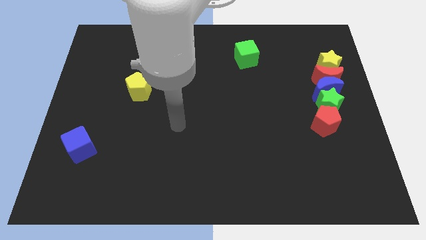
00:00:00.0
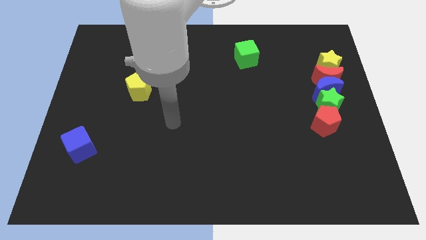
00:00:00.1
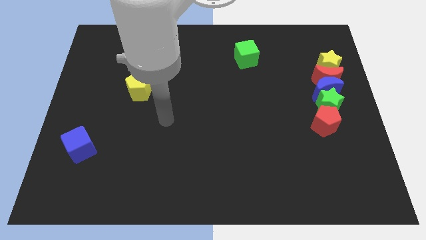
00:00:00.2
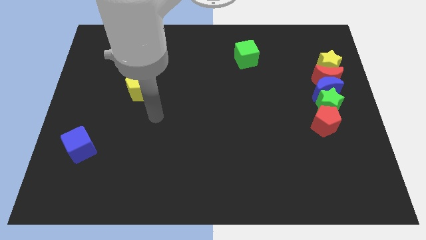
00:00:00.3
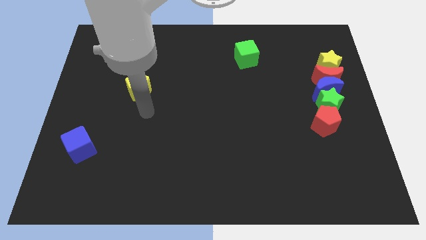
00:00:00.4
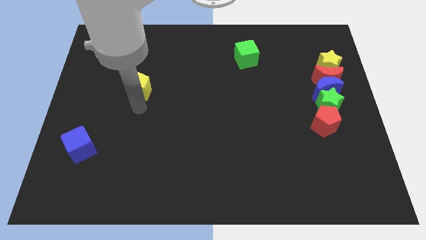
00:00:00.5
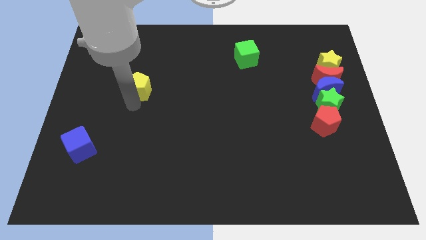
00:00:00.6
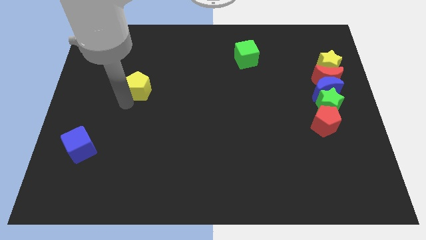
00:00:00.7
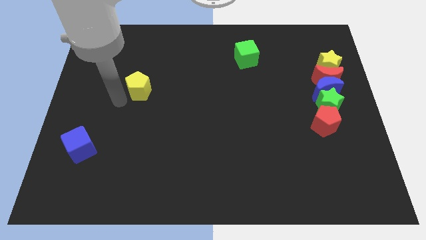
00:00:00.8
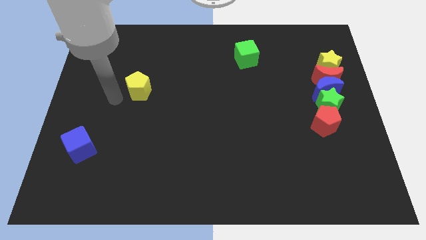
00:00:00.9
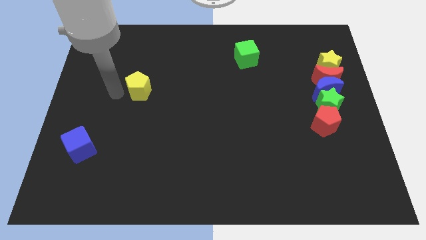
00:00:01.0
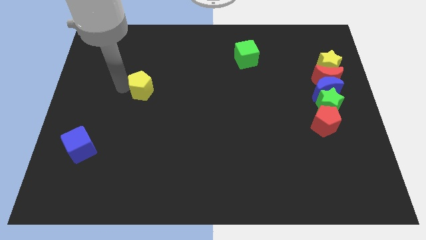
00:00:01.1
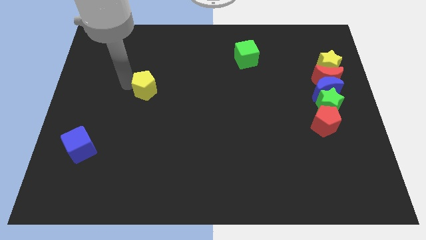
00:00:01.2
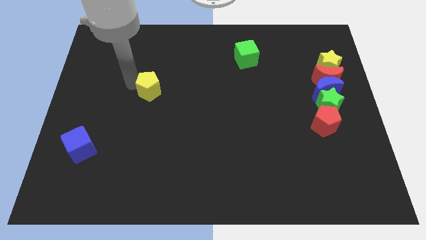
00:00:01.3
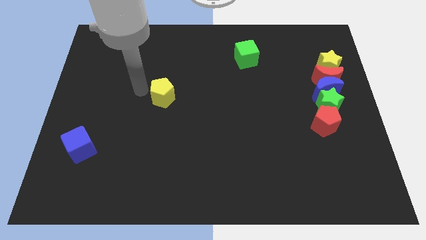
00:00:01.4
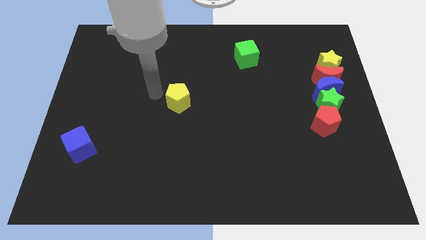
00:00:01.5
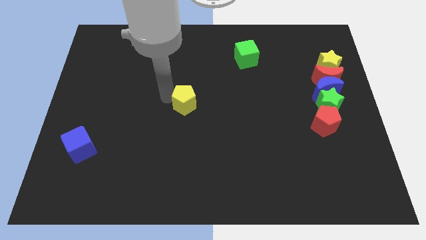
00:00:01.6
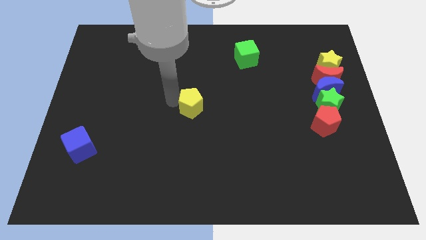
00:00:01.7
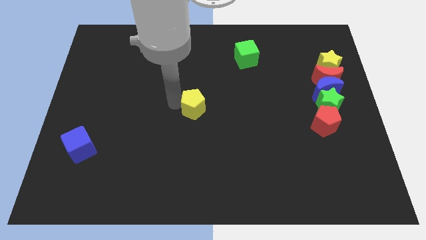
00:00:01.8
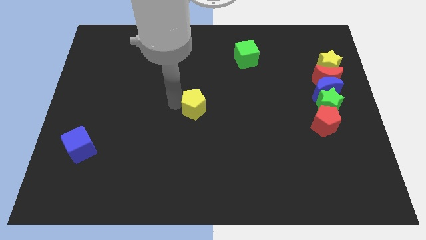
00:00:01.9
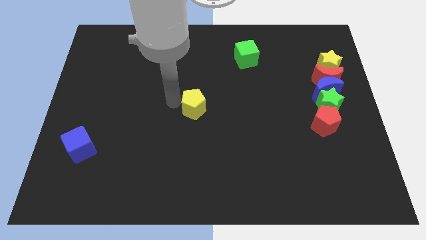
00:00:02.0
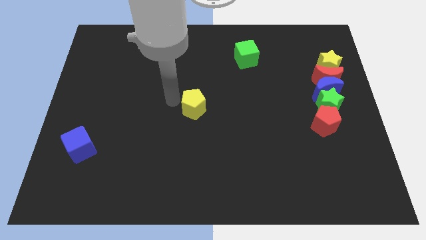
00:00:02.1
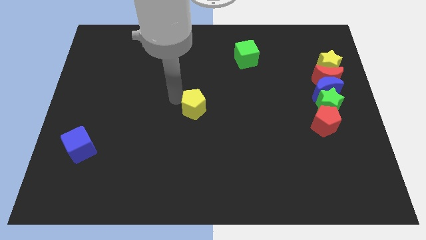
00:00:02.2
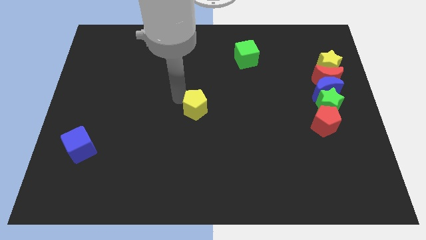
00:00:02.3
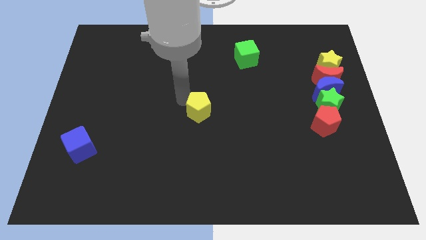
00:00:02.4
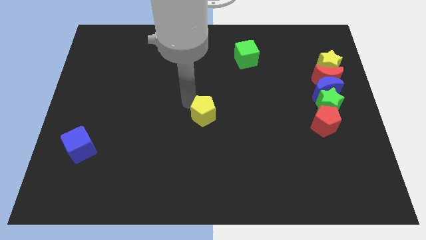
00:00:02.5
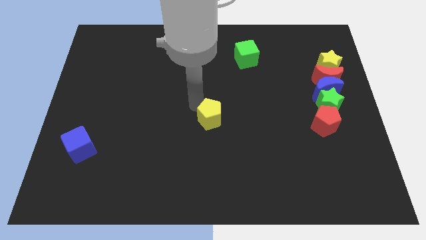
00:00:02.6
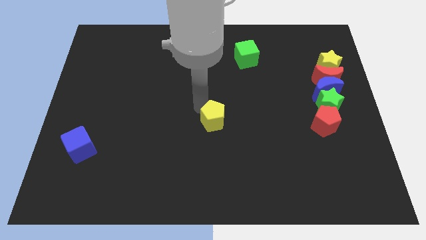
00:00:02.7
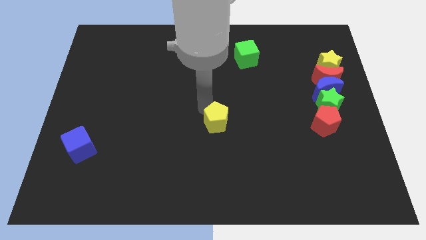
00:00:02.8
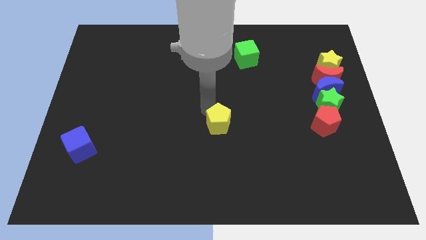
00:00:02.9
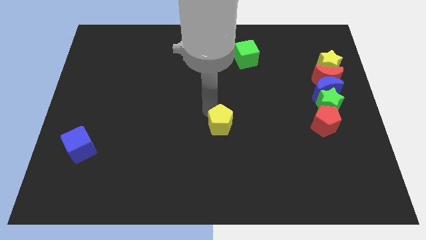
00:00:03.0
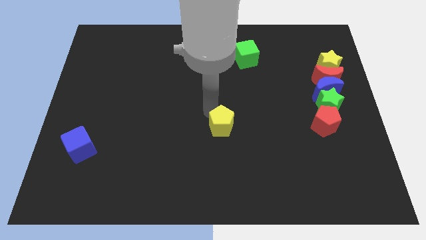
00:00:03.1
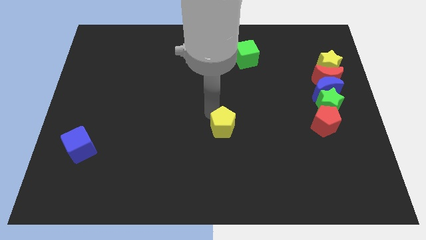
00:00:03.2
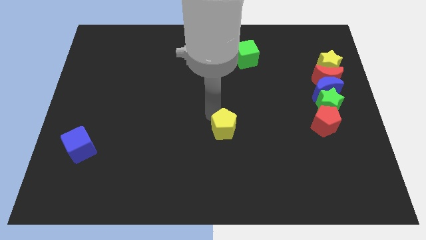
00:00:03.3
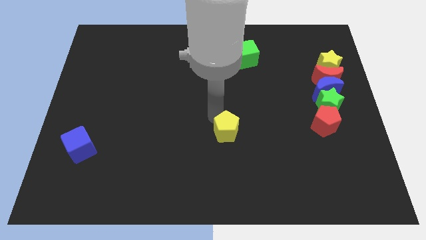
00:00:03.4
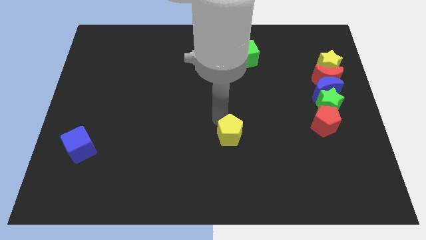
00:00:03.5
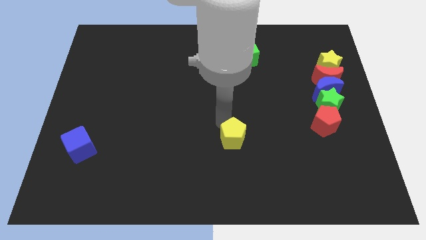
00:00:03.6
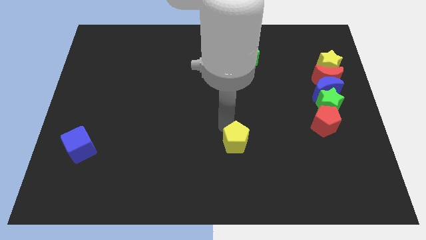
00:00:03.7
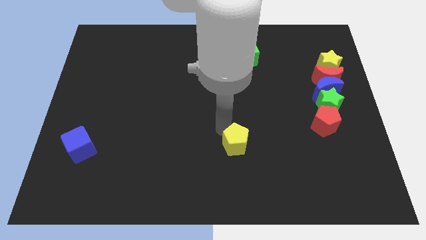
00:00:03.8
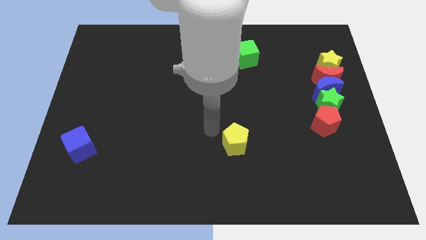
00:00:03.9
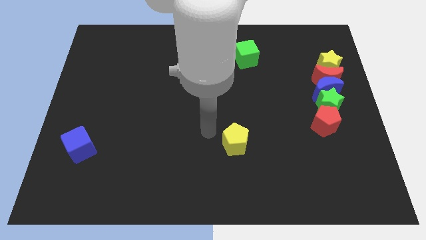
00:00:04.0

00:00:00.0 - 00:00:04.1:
move the yellow pentagon towards the bottom side of the board

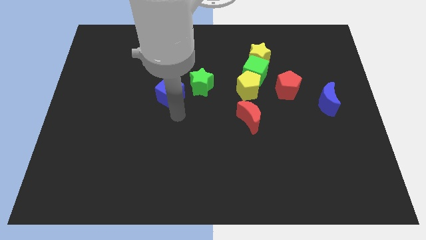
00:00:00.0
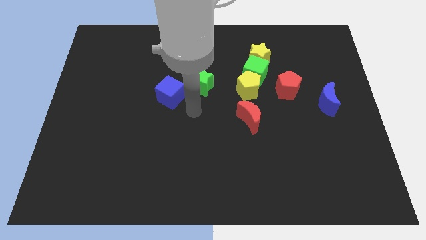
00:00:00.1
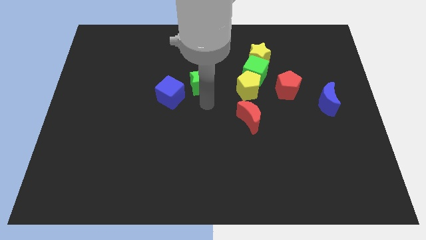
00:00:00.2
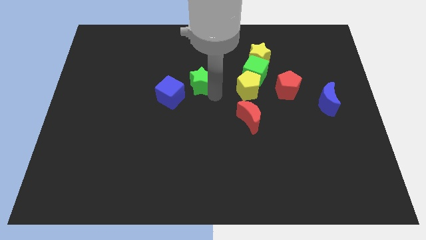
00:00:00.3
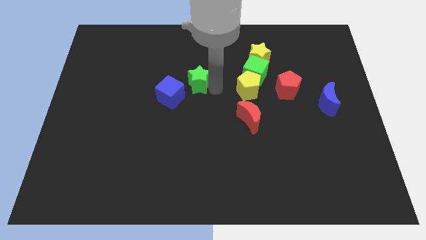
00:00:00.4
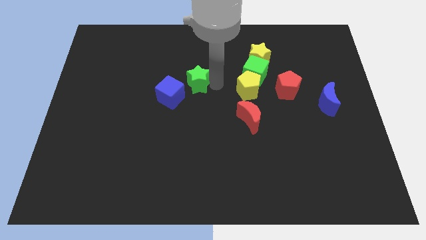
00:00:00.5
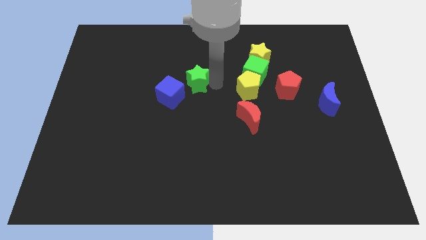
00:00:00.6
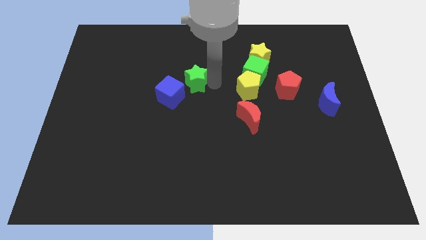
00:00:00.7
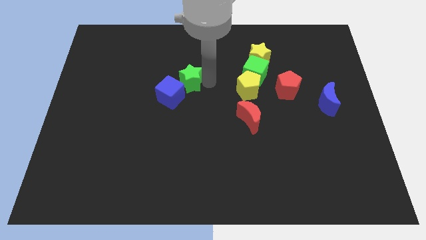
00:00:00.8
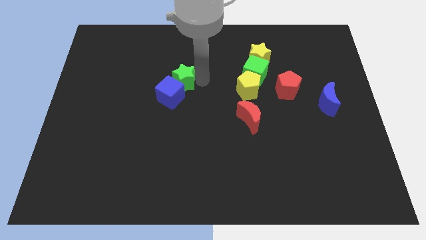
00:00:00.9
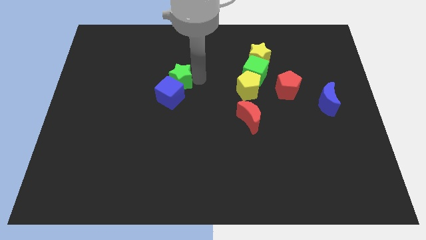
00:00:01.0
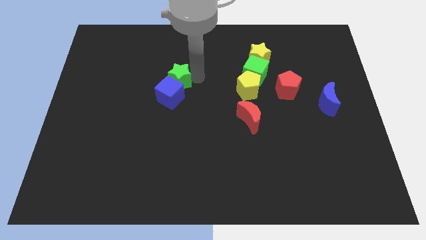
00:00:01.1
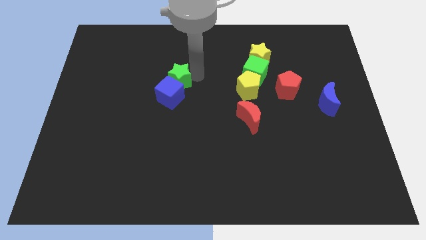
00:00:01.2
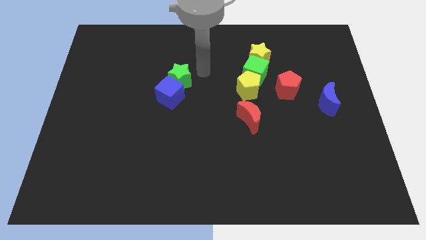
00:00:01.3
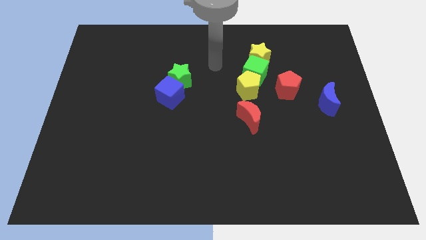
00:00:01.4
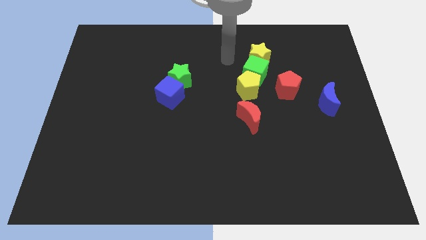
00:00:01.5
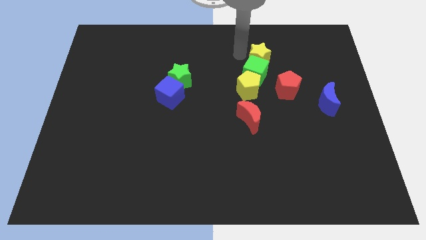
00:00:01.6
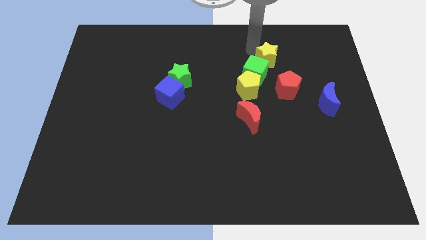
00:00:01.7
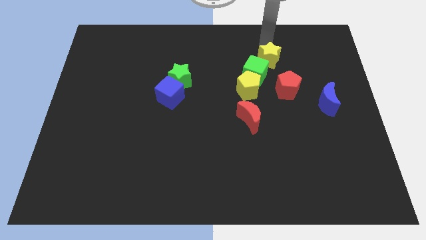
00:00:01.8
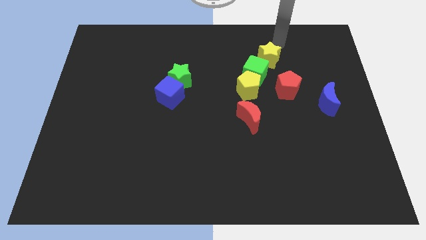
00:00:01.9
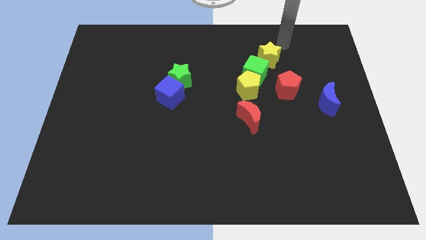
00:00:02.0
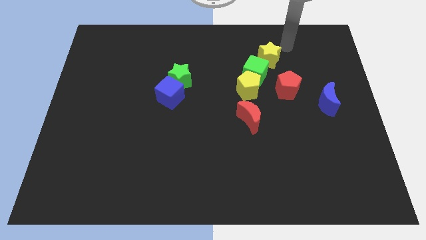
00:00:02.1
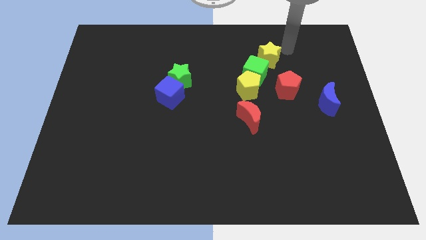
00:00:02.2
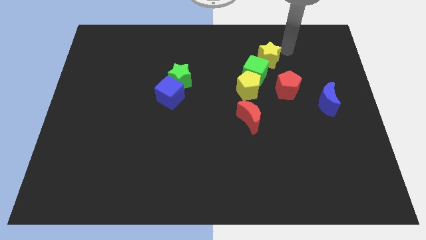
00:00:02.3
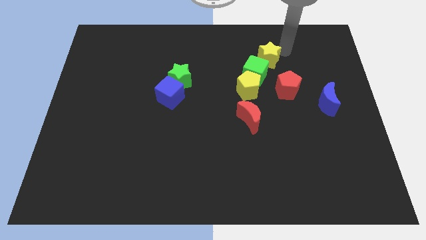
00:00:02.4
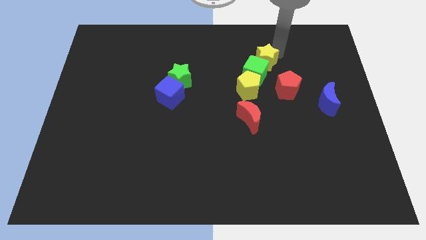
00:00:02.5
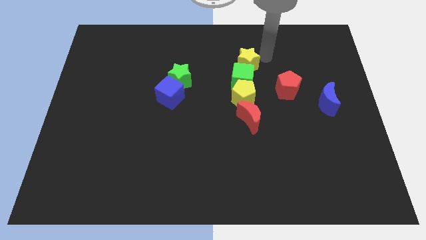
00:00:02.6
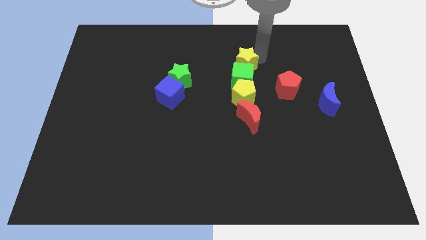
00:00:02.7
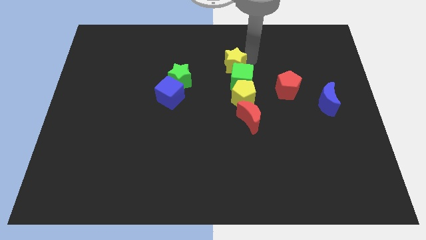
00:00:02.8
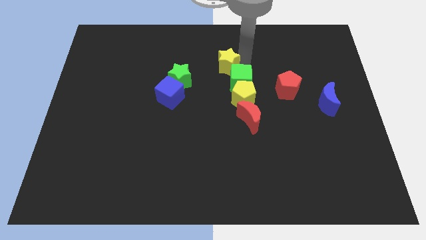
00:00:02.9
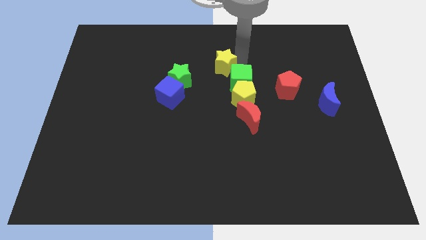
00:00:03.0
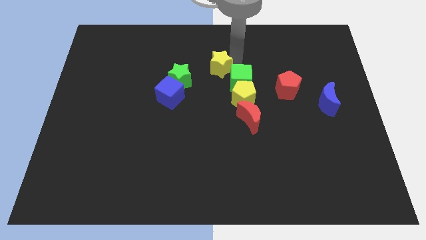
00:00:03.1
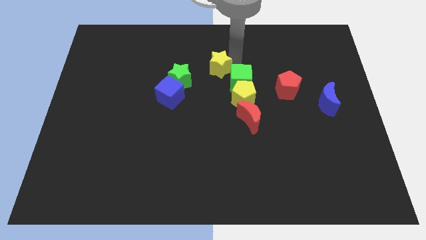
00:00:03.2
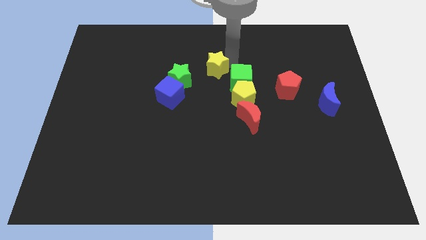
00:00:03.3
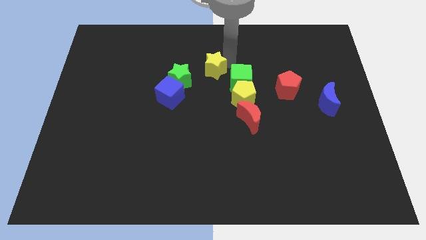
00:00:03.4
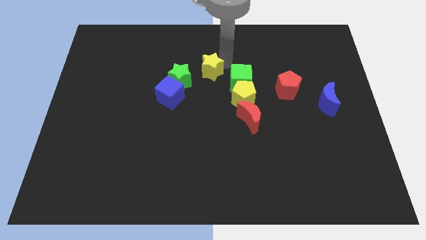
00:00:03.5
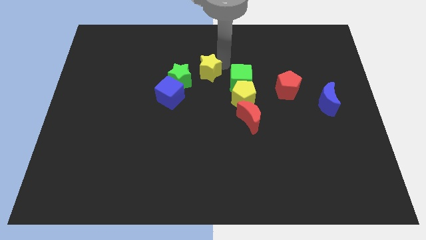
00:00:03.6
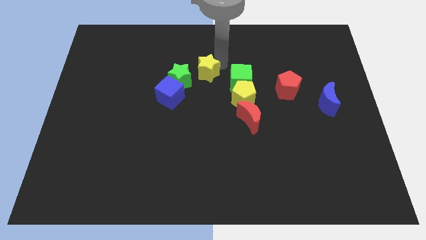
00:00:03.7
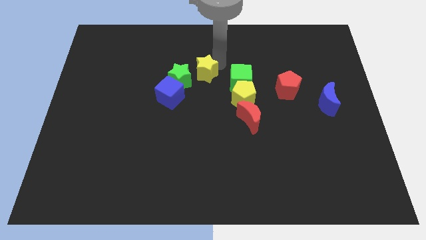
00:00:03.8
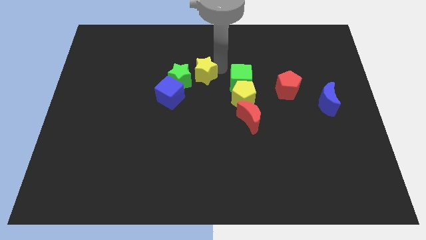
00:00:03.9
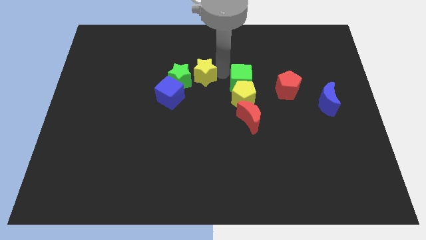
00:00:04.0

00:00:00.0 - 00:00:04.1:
move the yellow star diagonally top right to green star

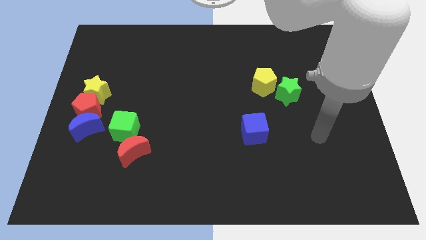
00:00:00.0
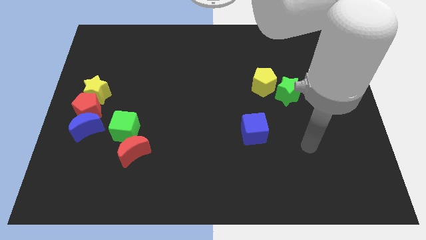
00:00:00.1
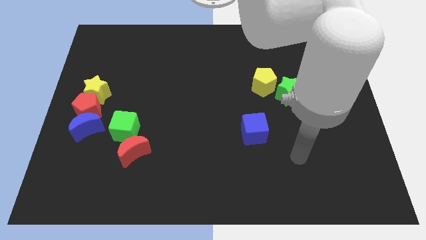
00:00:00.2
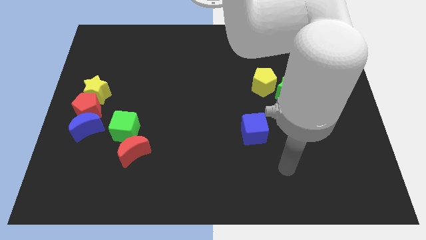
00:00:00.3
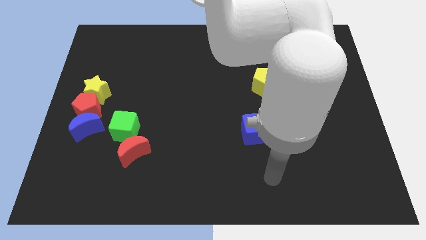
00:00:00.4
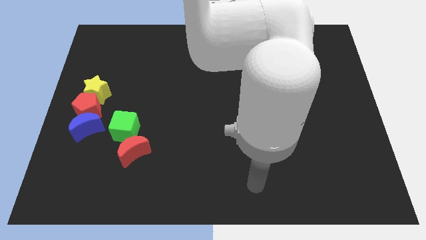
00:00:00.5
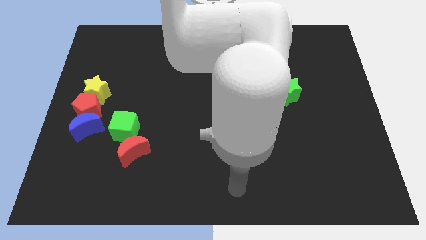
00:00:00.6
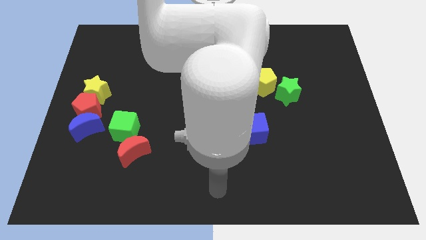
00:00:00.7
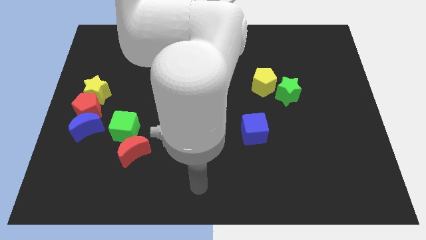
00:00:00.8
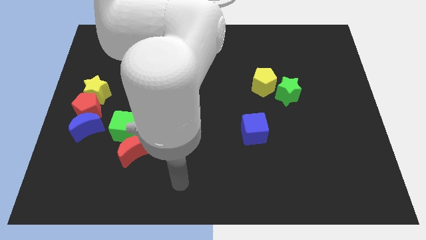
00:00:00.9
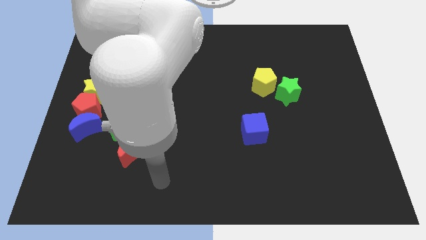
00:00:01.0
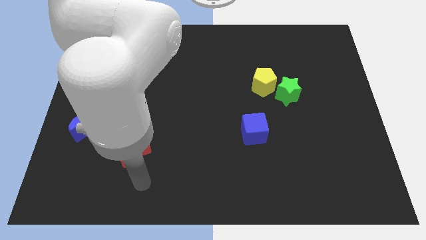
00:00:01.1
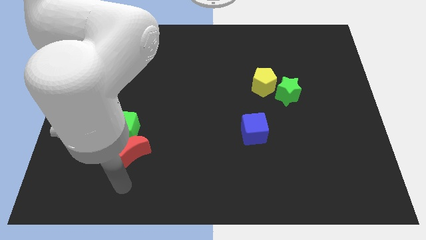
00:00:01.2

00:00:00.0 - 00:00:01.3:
place your arm below red crescent
